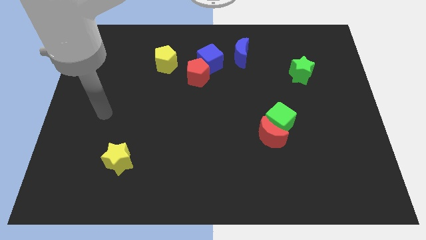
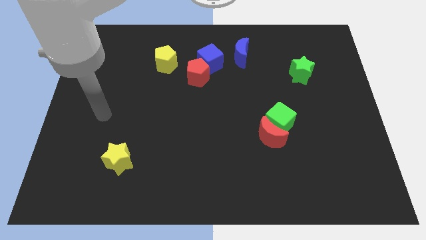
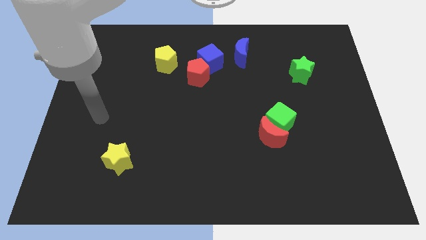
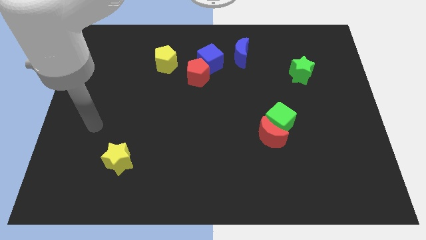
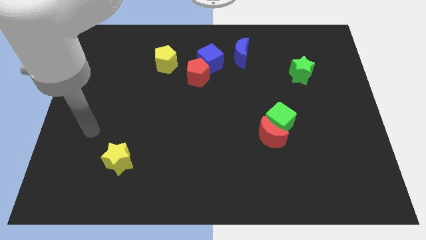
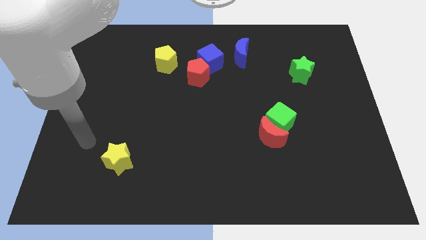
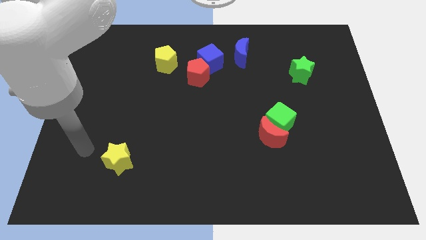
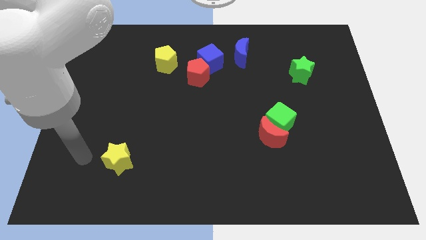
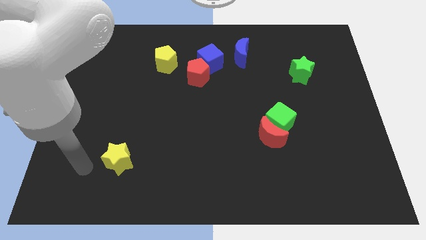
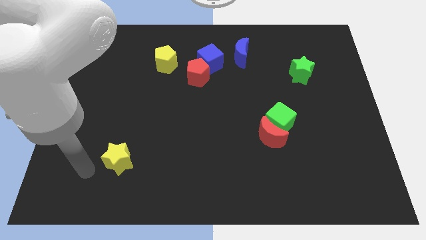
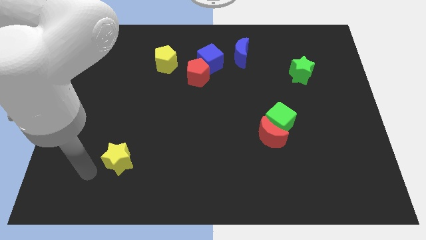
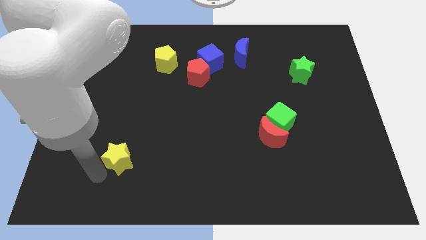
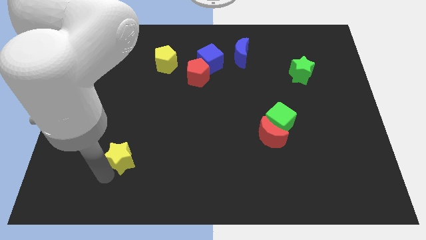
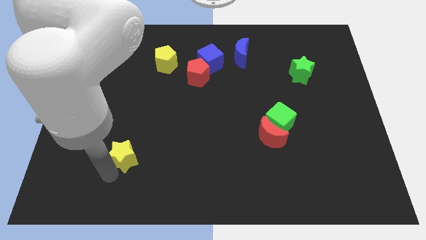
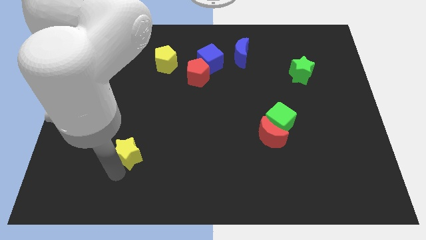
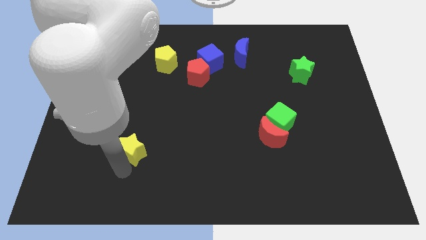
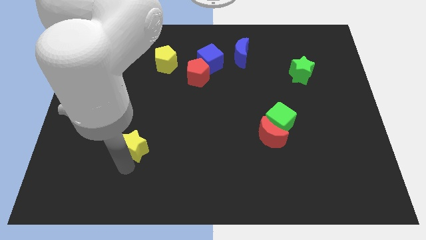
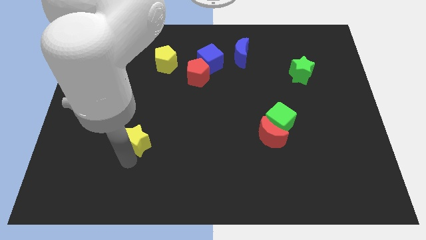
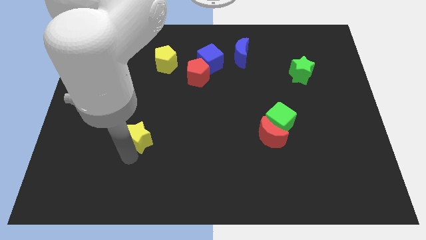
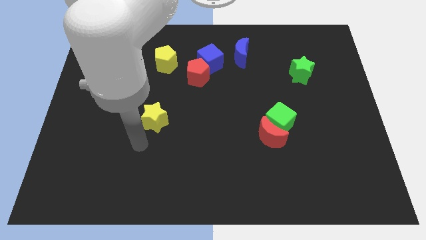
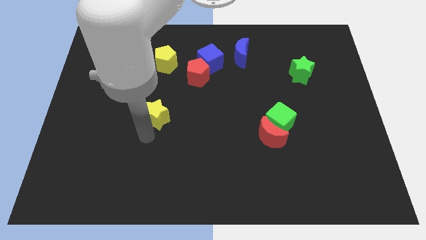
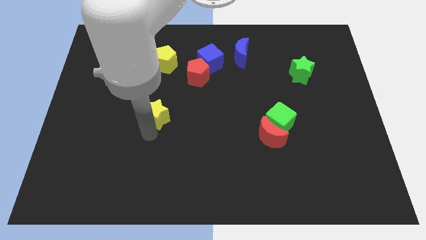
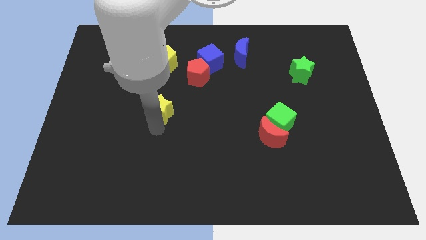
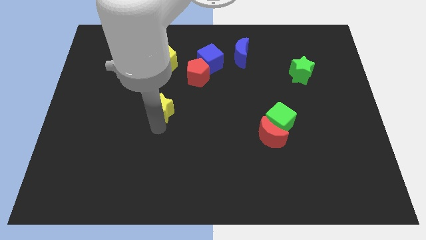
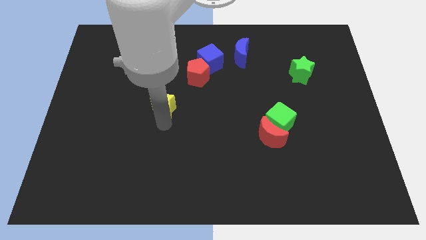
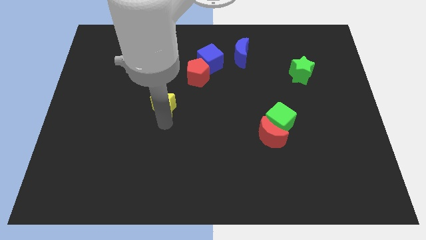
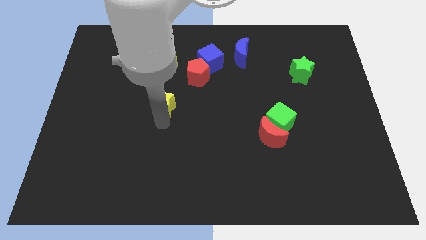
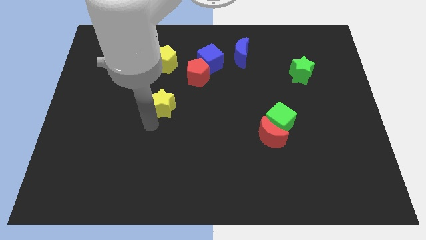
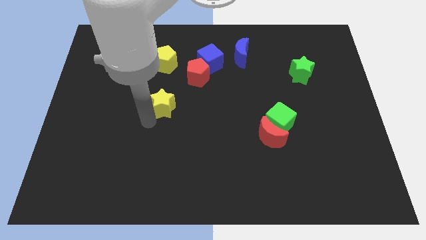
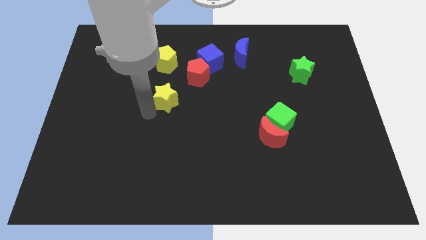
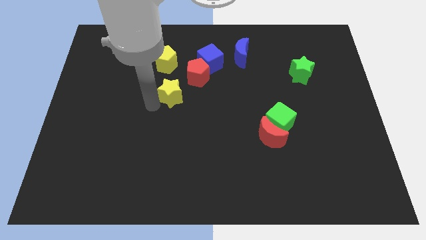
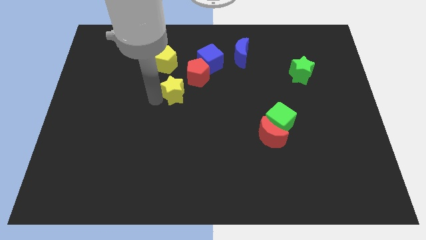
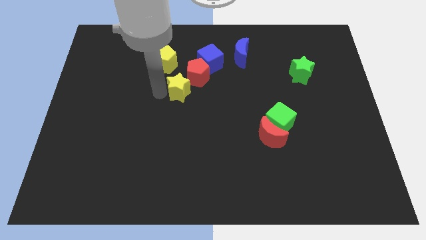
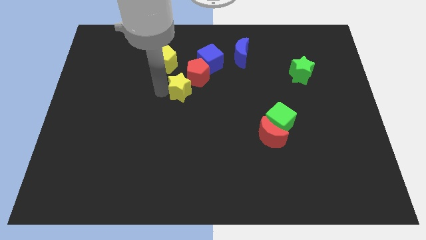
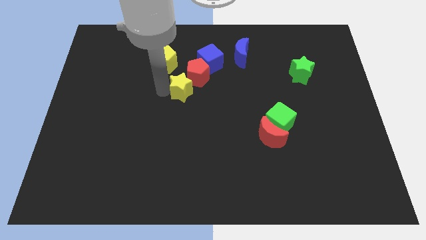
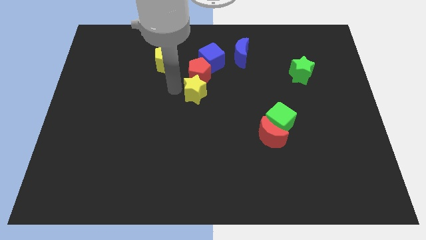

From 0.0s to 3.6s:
push the yellow star into the red pentagon

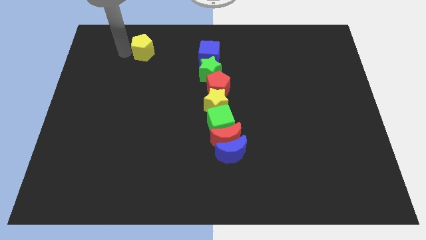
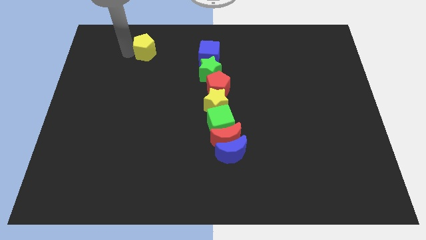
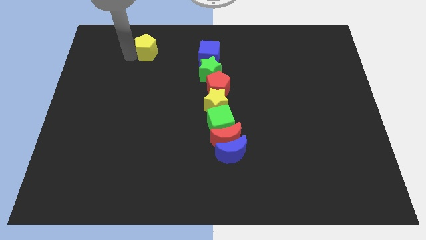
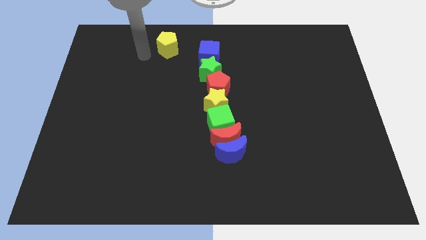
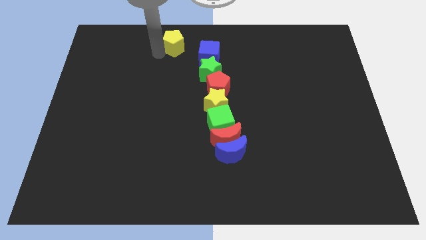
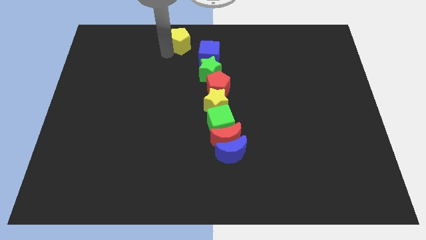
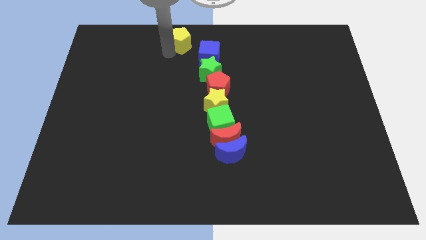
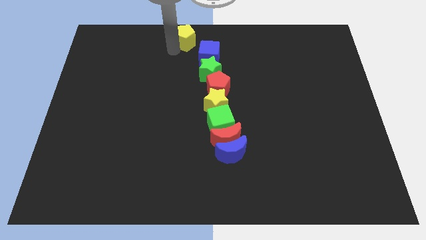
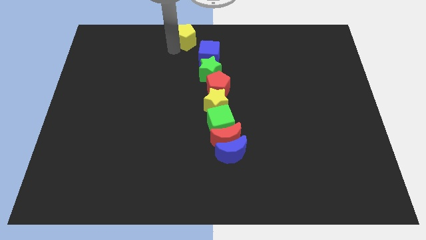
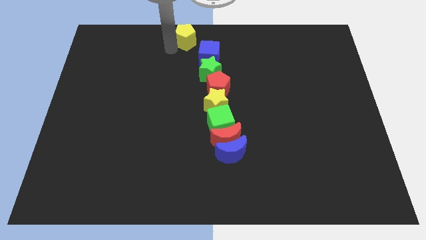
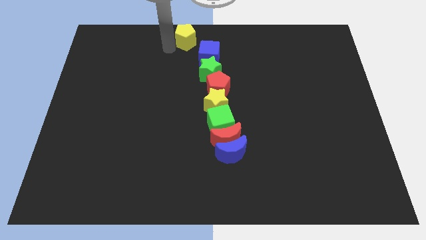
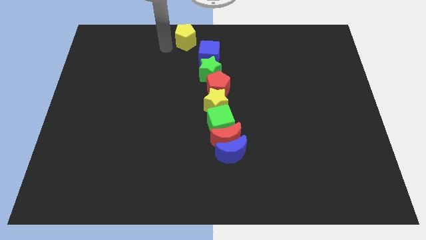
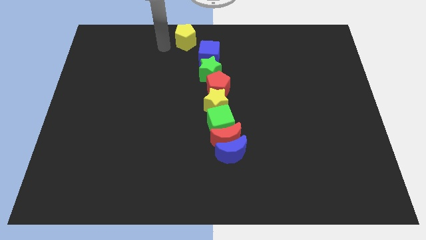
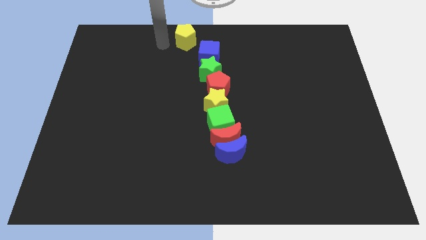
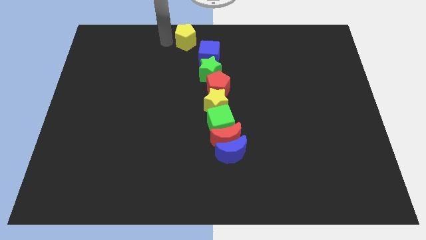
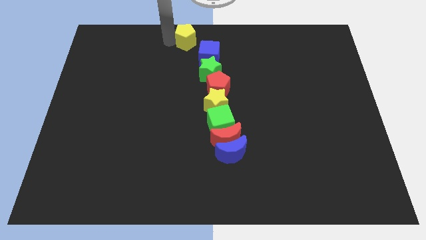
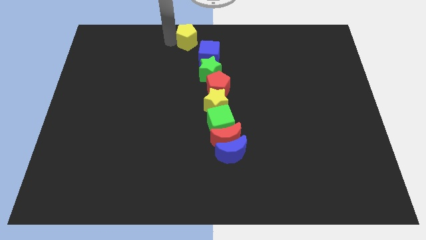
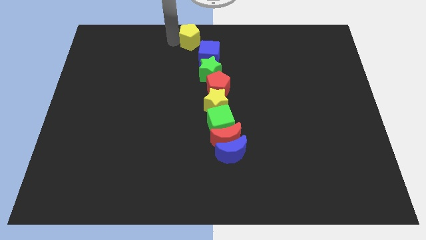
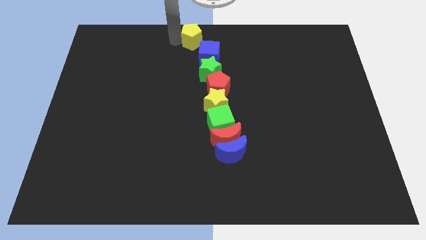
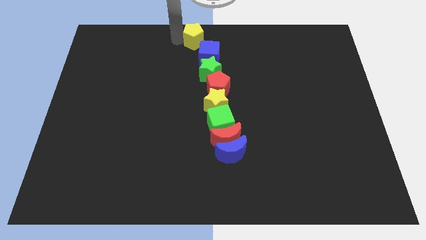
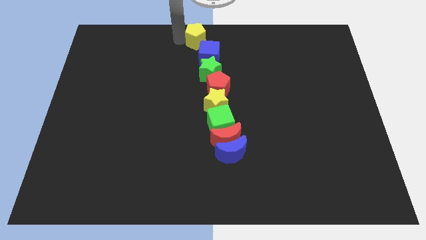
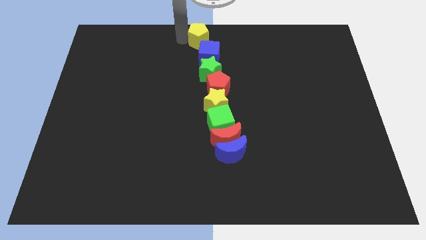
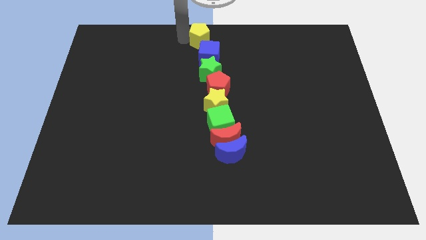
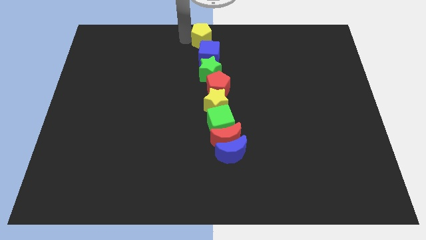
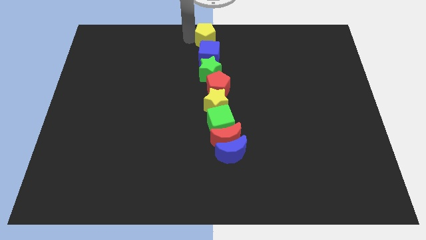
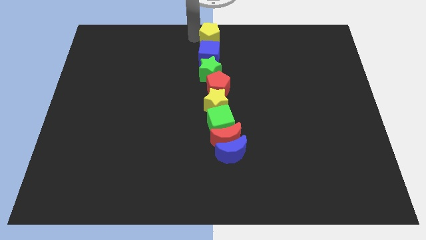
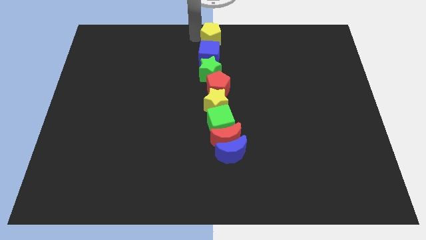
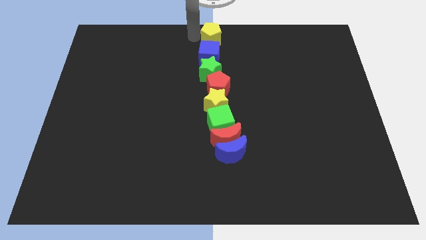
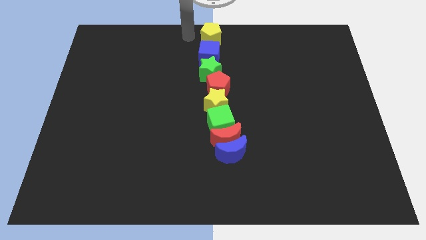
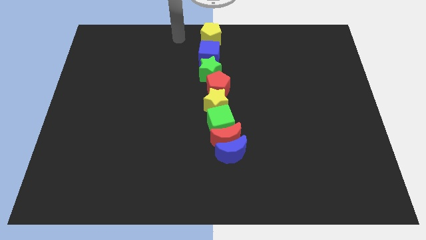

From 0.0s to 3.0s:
move the yellow pentagon above the blue cube to make a vertical line of the blocks

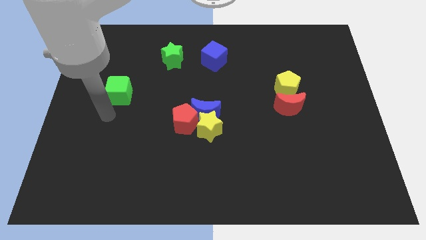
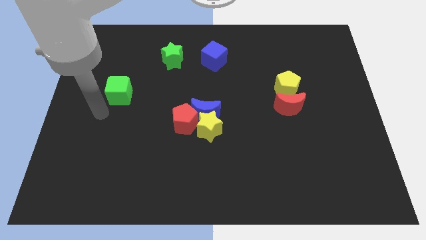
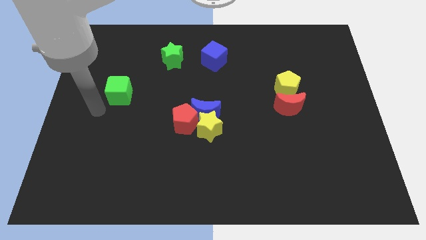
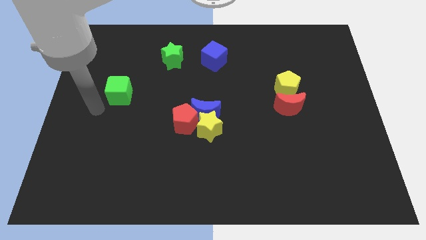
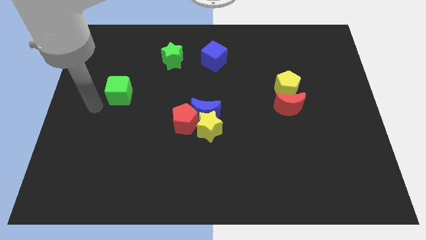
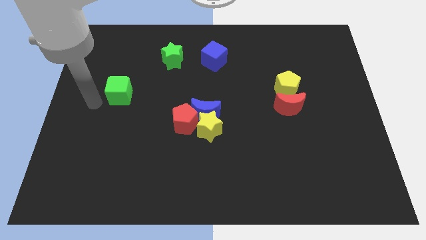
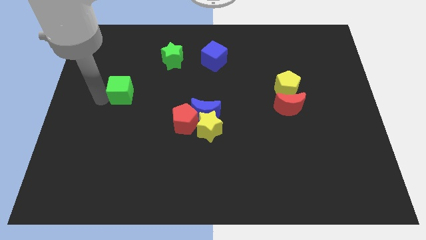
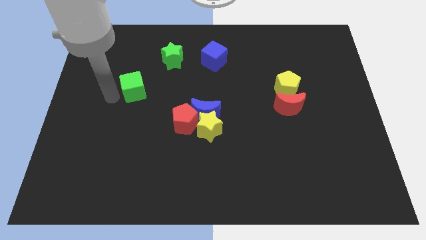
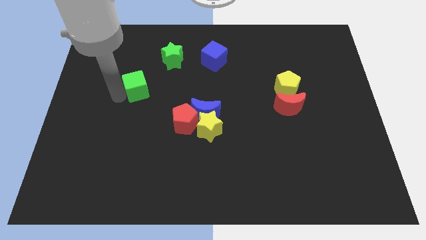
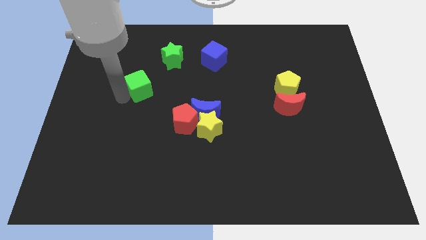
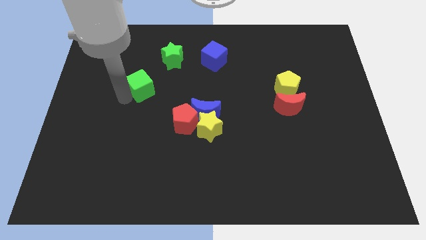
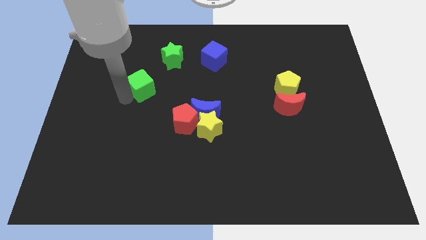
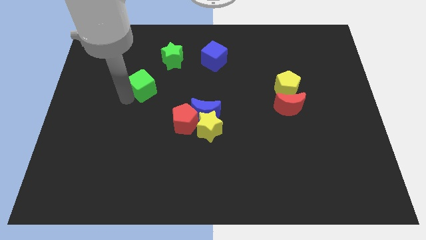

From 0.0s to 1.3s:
place the green cube diagonally to the bottom left of the green star

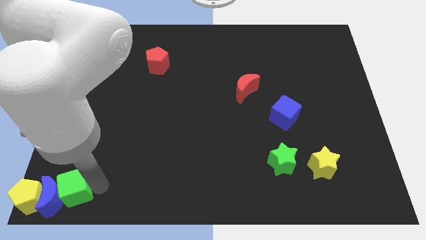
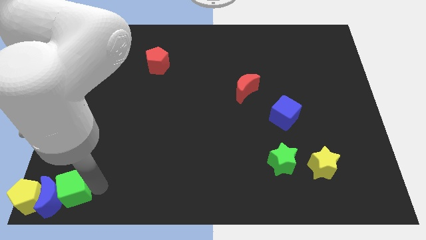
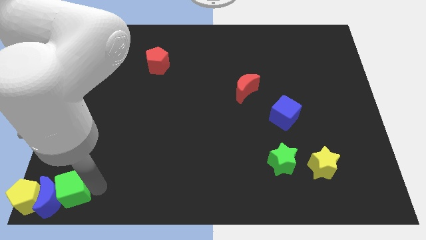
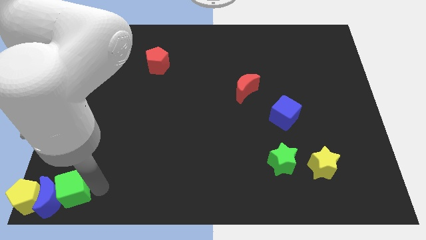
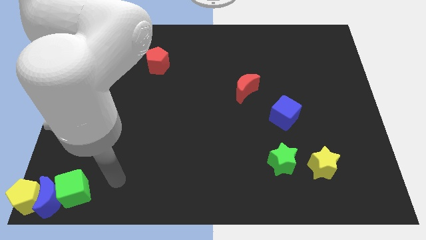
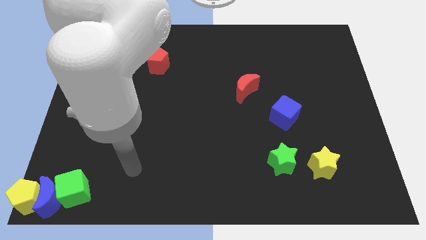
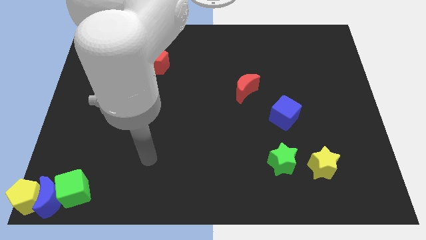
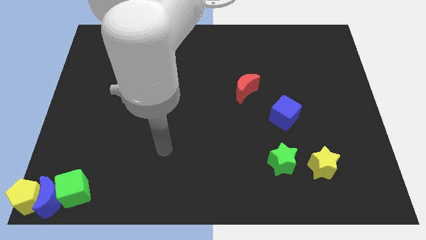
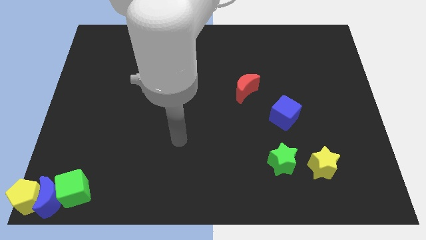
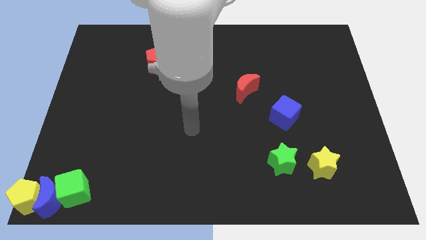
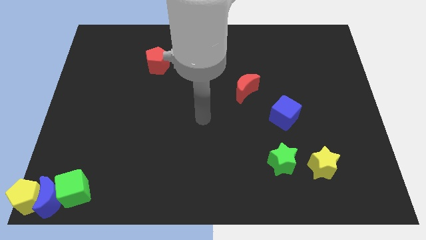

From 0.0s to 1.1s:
move your arm to the center
